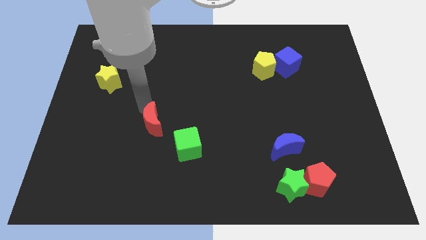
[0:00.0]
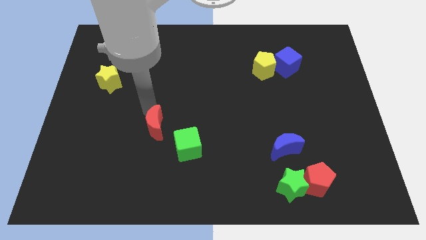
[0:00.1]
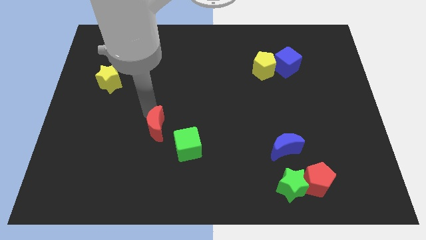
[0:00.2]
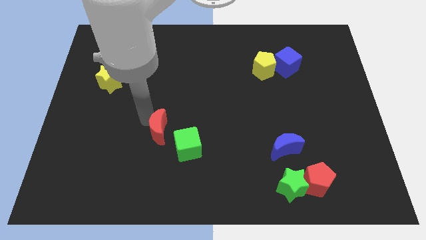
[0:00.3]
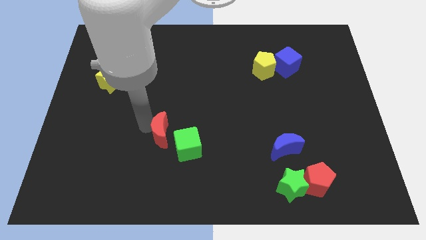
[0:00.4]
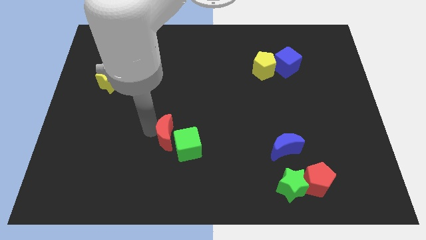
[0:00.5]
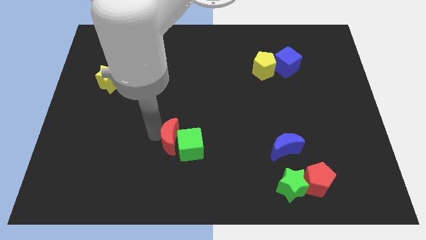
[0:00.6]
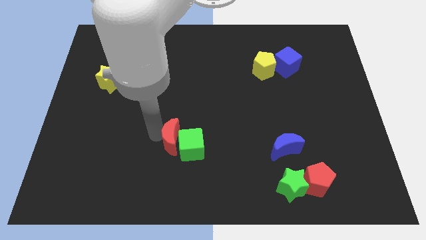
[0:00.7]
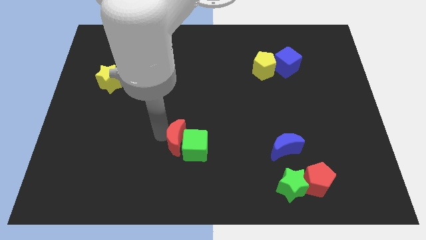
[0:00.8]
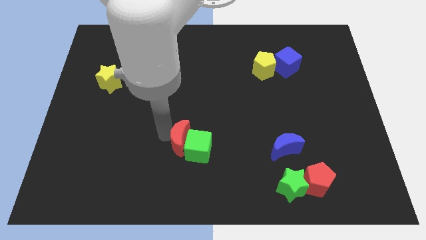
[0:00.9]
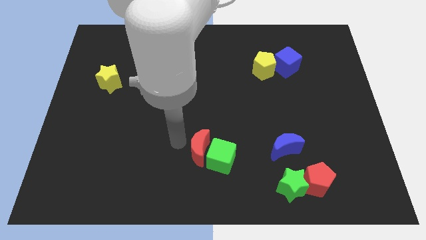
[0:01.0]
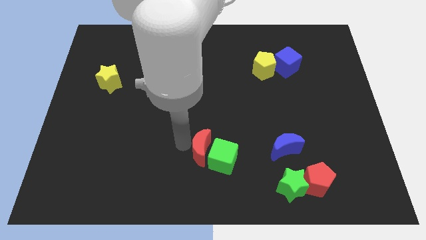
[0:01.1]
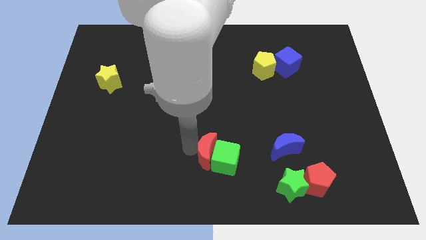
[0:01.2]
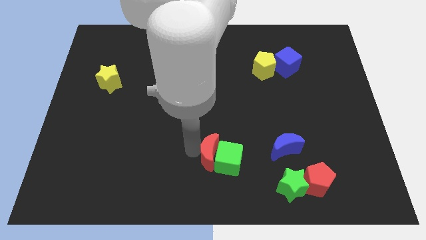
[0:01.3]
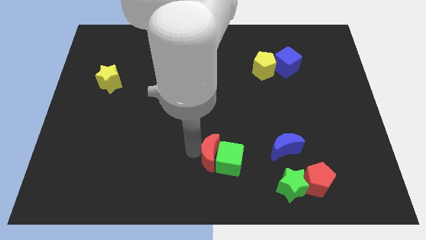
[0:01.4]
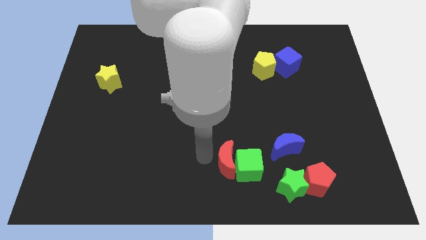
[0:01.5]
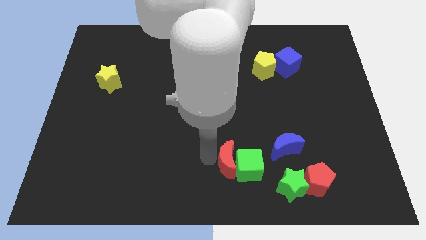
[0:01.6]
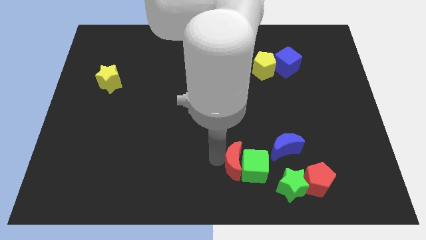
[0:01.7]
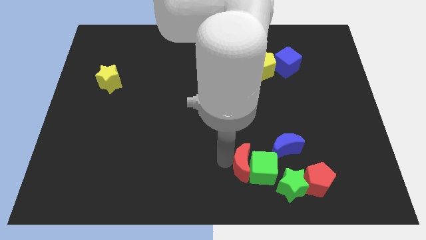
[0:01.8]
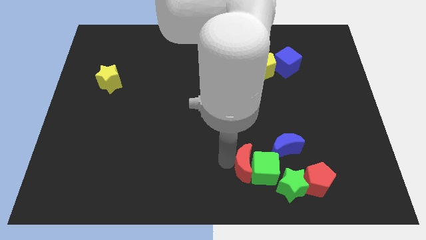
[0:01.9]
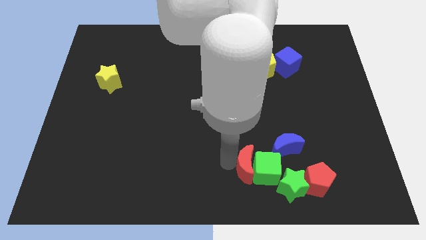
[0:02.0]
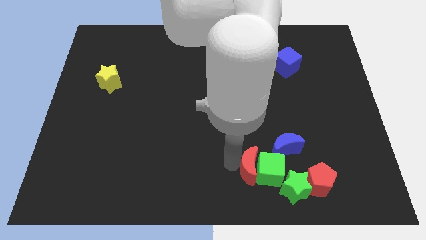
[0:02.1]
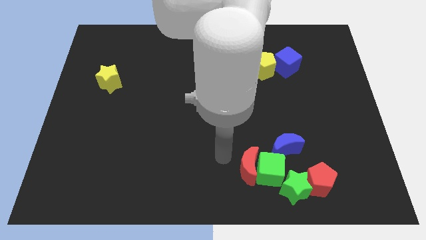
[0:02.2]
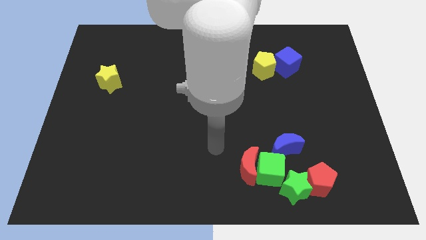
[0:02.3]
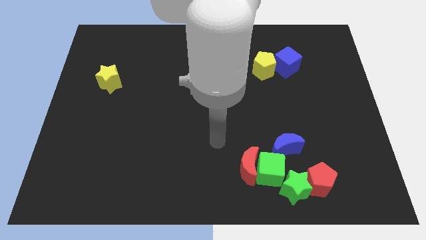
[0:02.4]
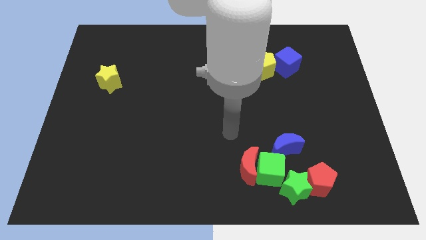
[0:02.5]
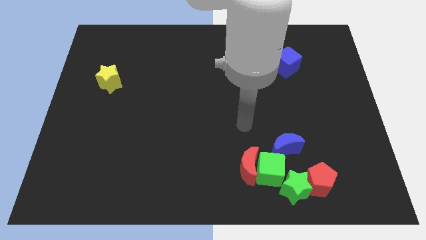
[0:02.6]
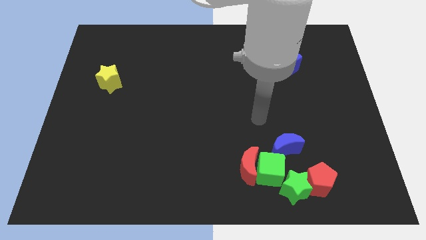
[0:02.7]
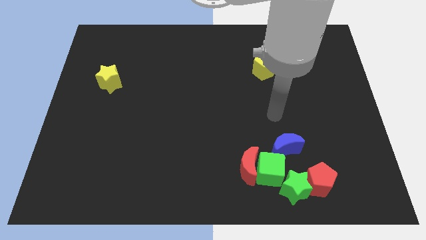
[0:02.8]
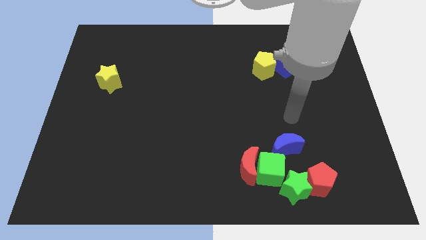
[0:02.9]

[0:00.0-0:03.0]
move the green cube and red moon towards left of the green star

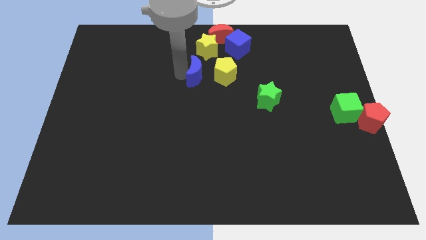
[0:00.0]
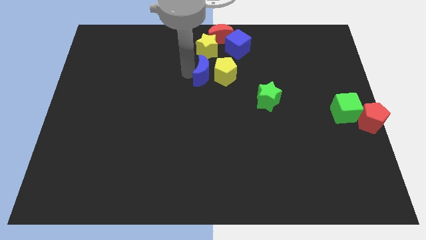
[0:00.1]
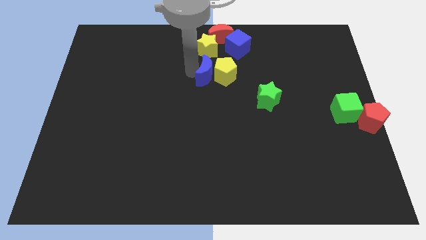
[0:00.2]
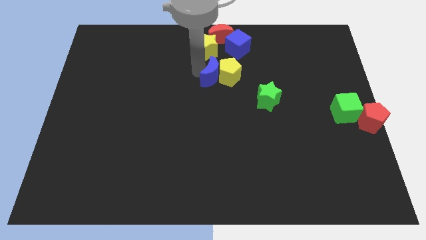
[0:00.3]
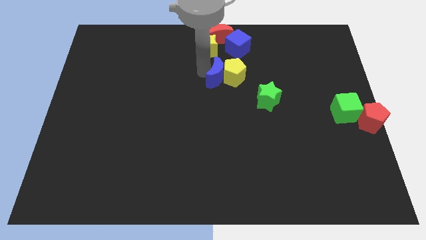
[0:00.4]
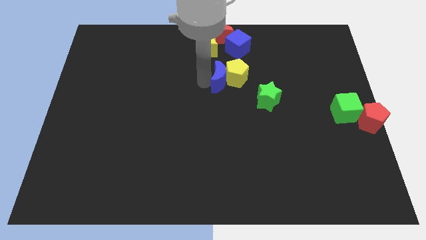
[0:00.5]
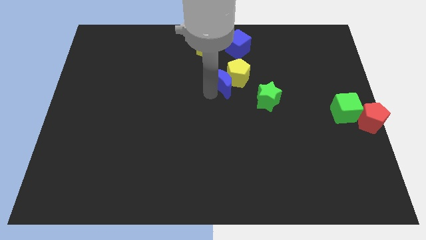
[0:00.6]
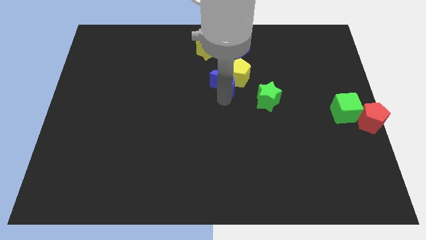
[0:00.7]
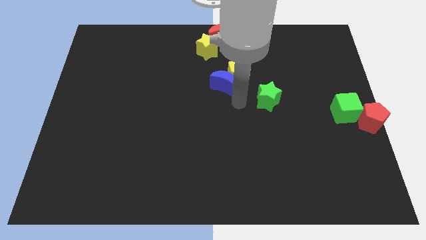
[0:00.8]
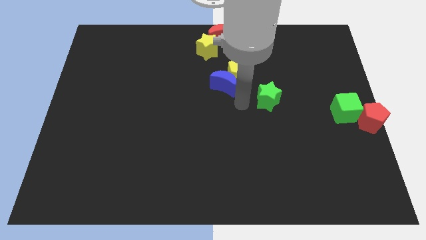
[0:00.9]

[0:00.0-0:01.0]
push the blue crescent into the yellow pentagon

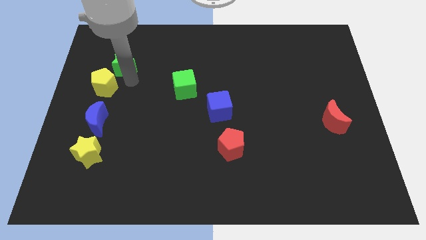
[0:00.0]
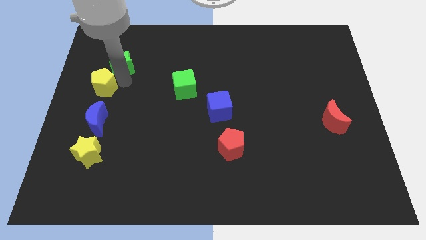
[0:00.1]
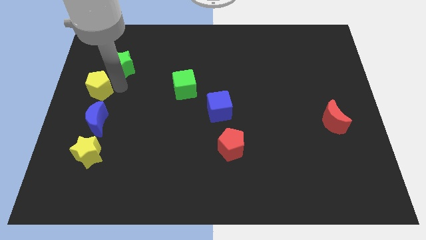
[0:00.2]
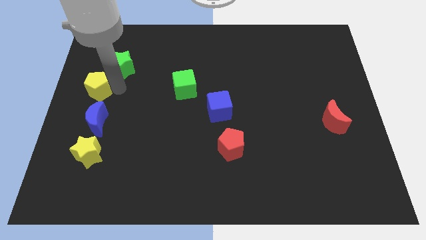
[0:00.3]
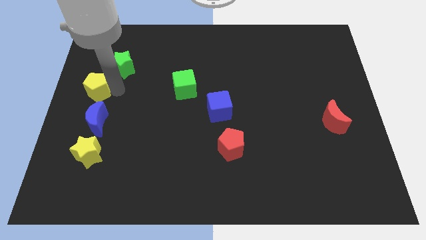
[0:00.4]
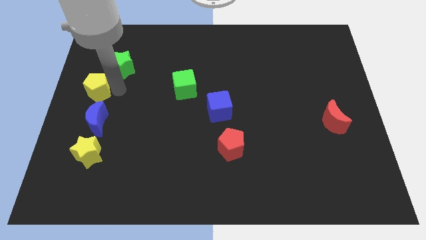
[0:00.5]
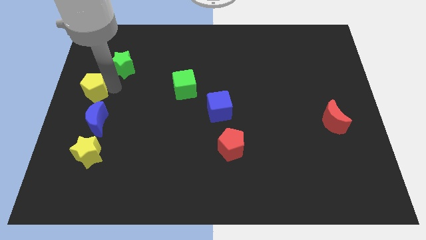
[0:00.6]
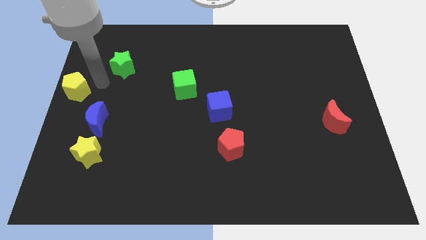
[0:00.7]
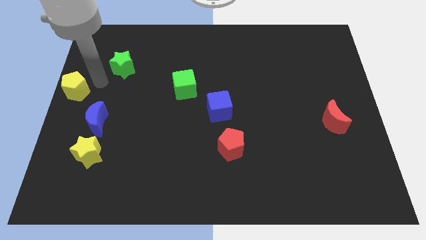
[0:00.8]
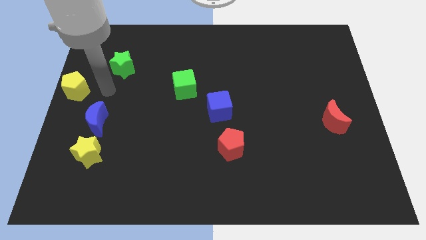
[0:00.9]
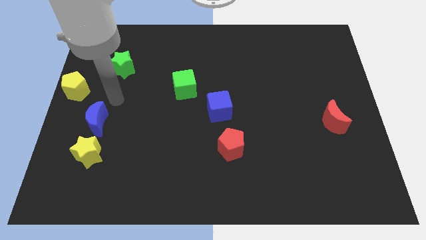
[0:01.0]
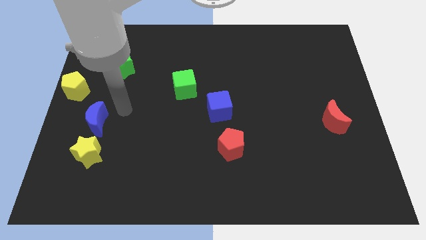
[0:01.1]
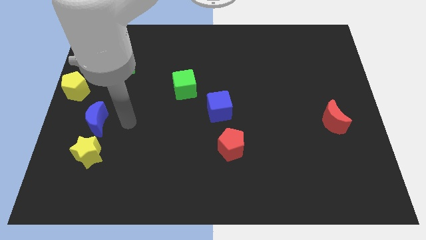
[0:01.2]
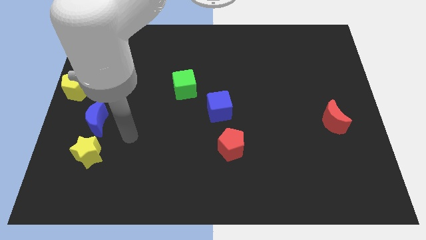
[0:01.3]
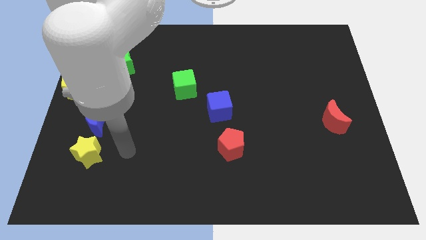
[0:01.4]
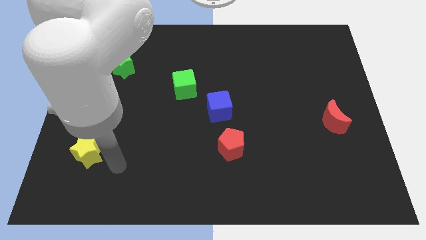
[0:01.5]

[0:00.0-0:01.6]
slightly move the yellow pentagon to the left of the board

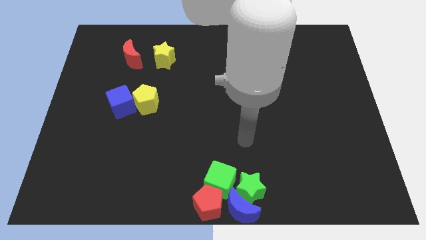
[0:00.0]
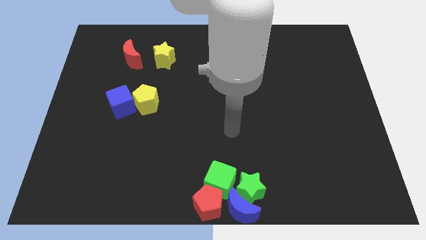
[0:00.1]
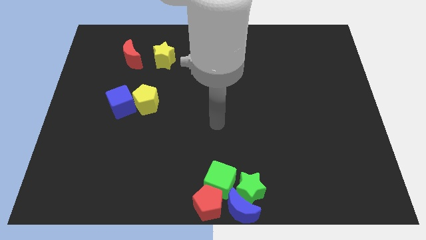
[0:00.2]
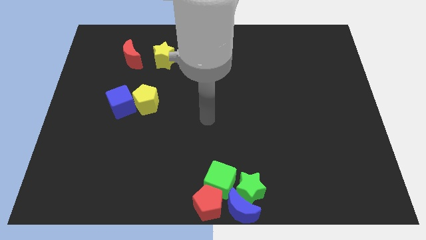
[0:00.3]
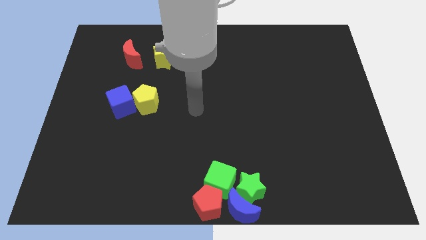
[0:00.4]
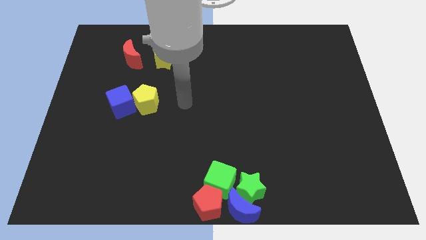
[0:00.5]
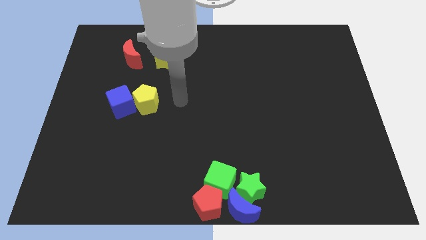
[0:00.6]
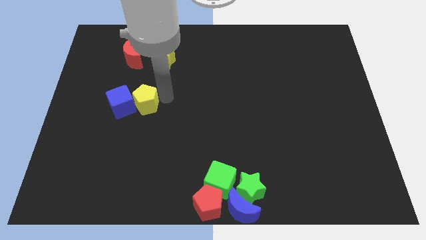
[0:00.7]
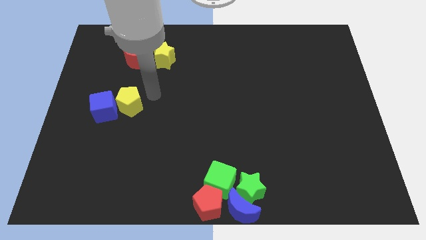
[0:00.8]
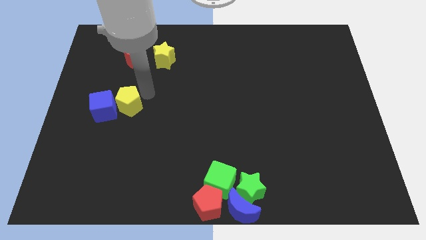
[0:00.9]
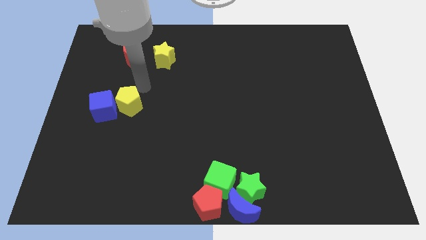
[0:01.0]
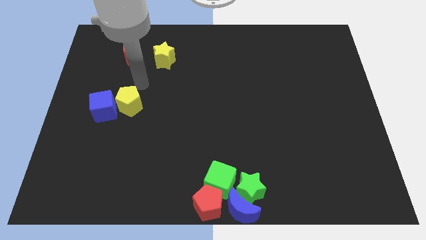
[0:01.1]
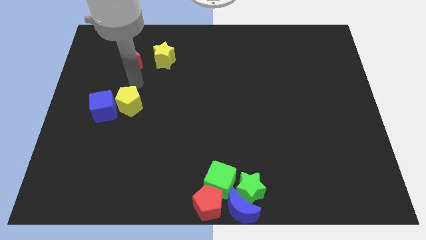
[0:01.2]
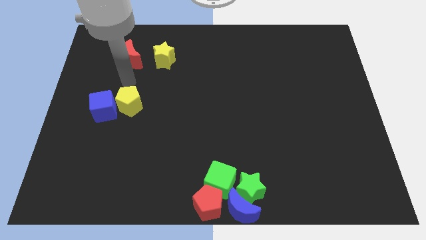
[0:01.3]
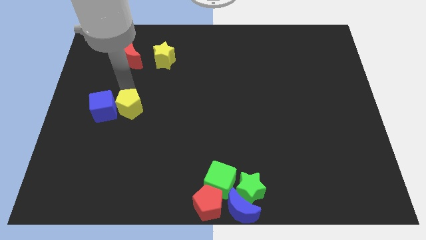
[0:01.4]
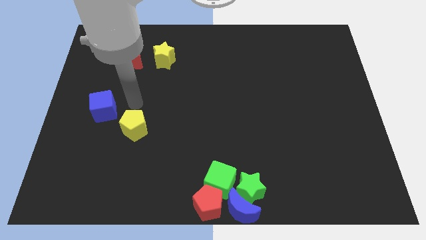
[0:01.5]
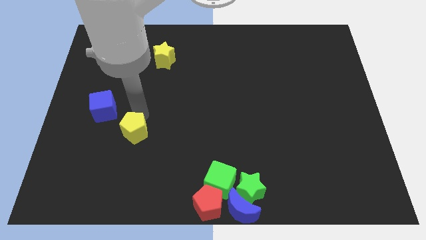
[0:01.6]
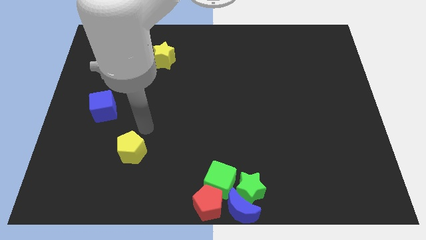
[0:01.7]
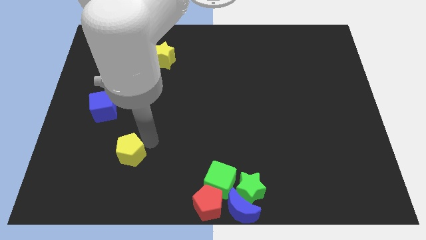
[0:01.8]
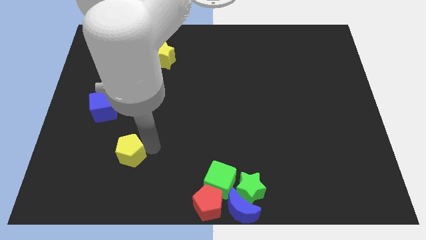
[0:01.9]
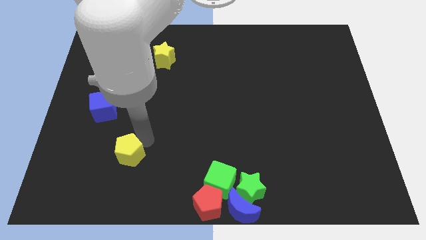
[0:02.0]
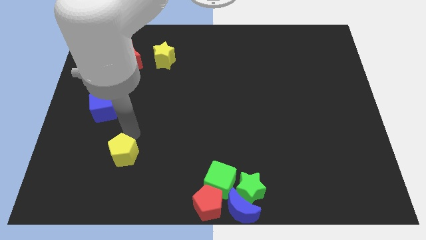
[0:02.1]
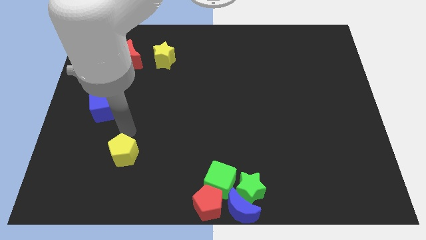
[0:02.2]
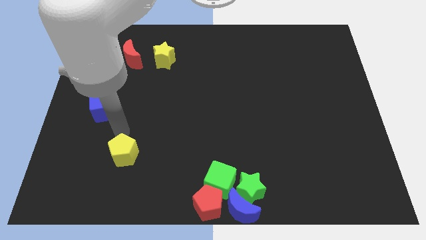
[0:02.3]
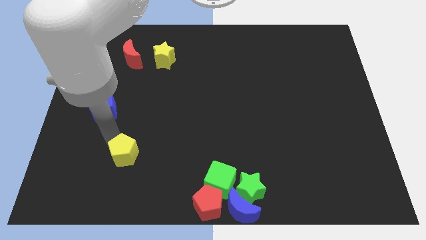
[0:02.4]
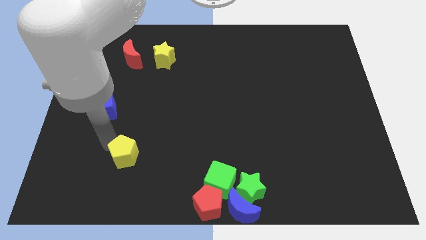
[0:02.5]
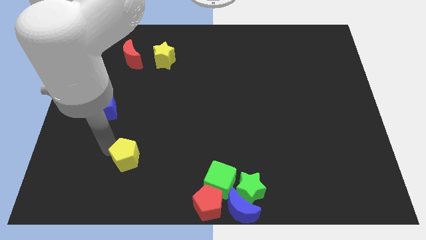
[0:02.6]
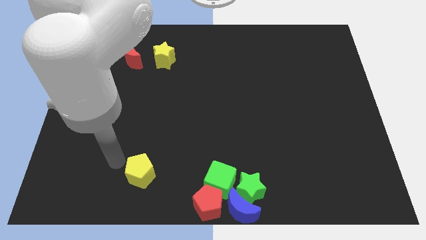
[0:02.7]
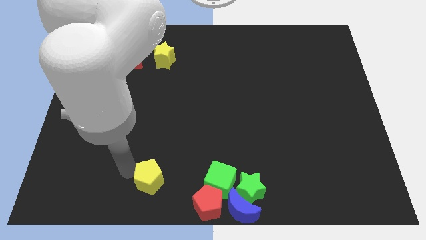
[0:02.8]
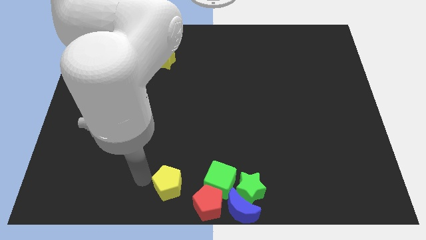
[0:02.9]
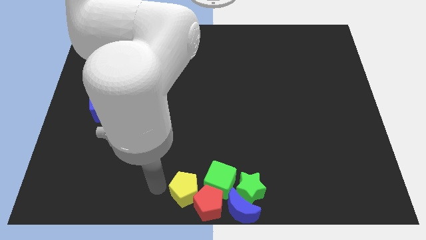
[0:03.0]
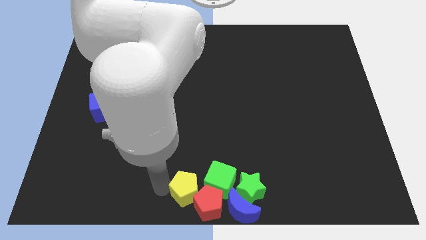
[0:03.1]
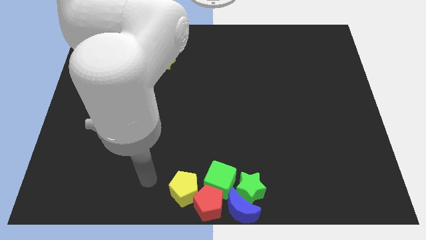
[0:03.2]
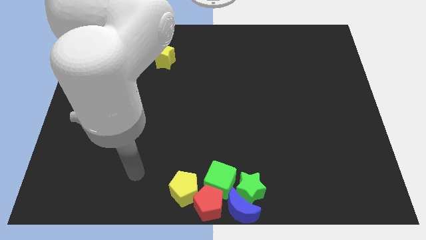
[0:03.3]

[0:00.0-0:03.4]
pull the yellow pentagon towards the bottom center

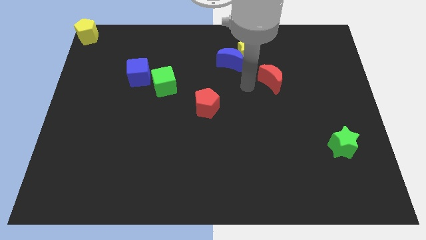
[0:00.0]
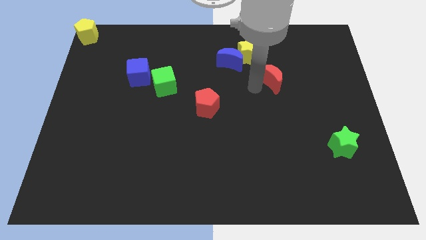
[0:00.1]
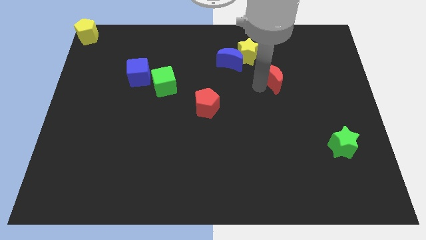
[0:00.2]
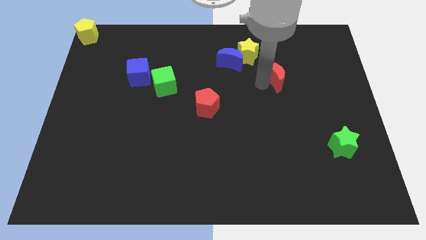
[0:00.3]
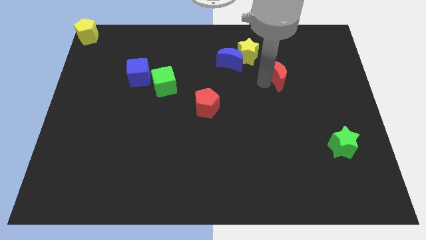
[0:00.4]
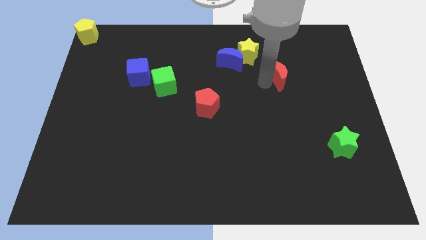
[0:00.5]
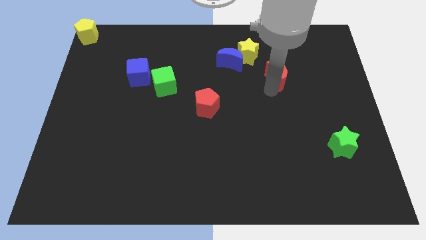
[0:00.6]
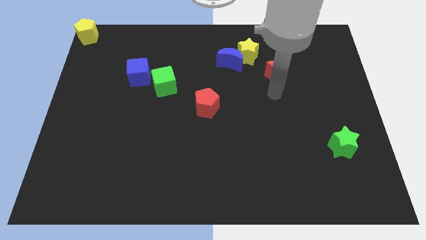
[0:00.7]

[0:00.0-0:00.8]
slide the red crescent to the top right corner
